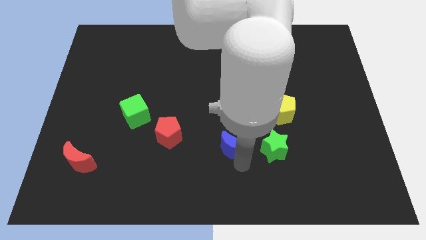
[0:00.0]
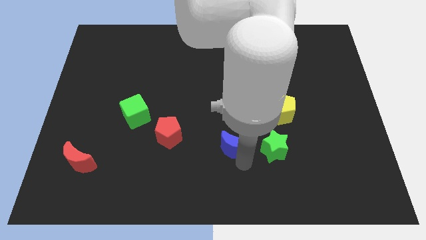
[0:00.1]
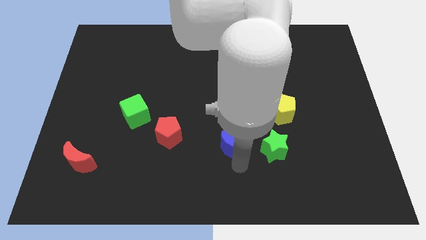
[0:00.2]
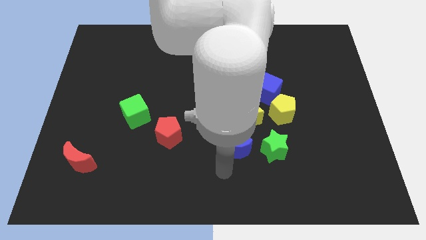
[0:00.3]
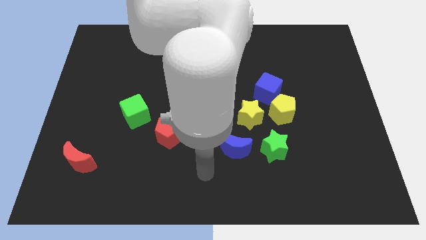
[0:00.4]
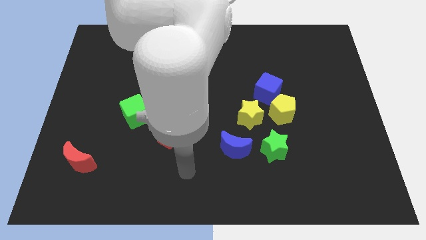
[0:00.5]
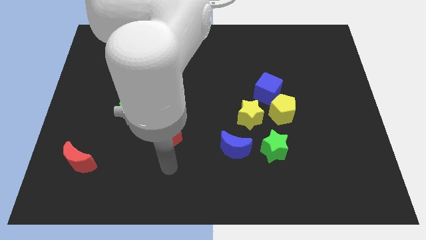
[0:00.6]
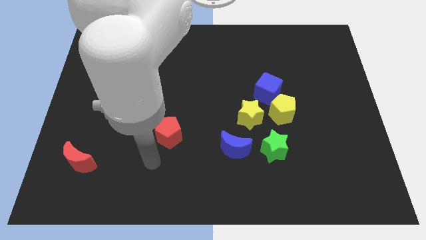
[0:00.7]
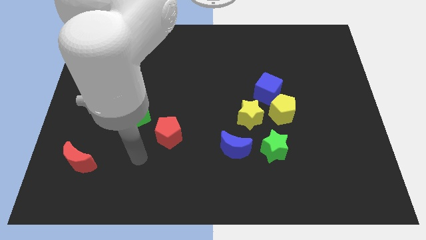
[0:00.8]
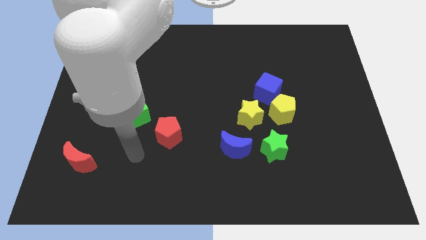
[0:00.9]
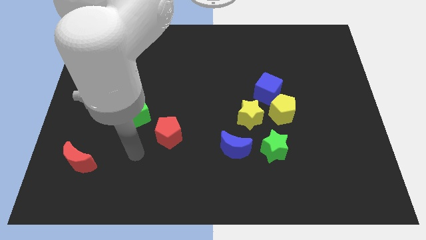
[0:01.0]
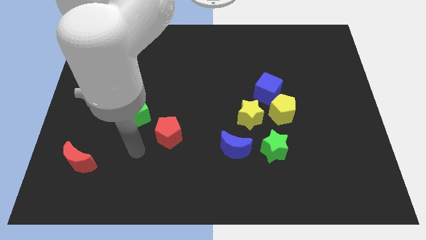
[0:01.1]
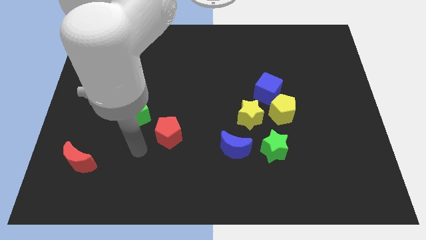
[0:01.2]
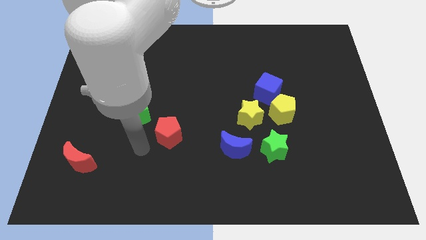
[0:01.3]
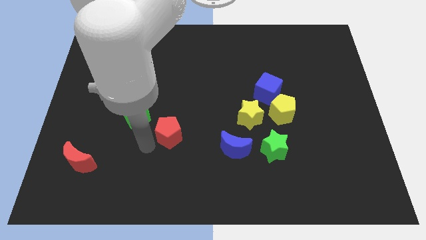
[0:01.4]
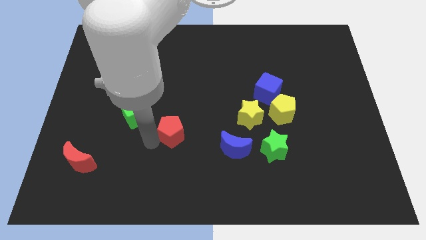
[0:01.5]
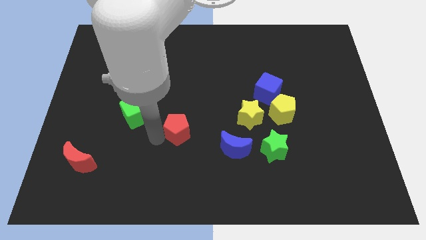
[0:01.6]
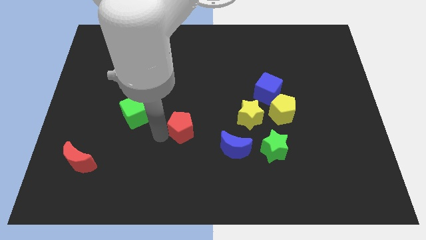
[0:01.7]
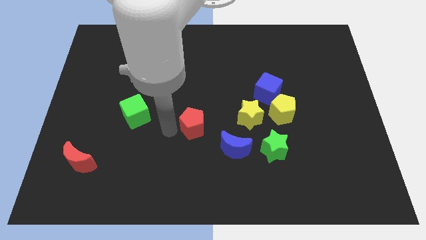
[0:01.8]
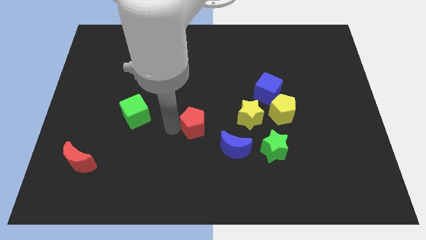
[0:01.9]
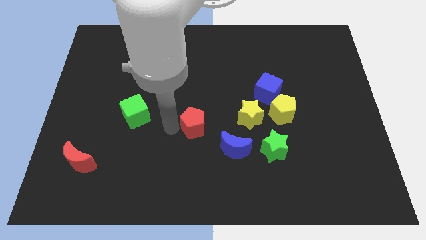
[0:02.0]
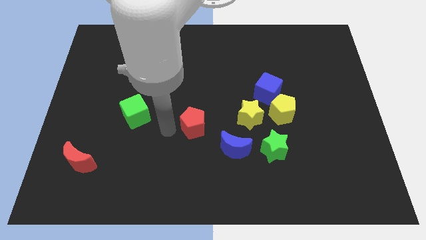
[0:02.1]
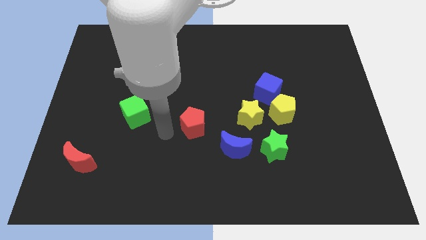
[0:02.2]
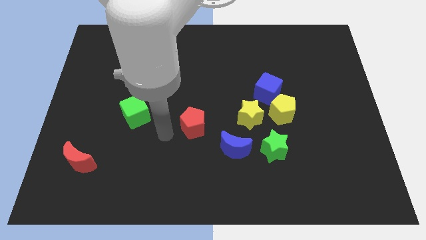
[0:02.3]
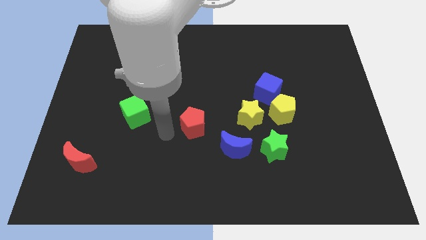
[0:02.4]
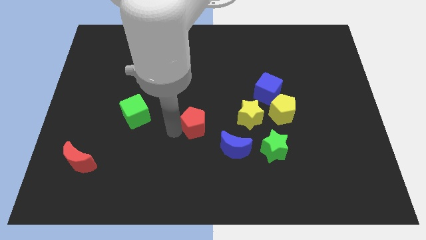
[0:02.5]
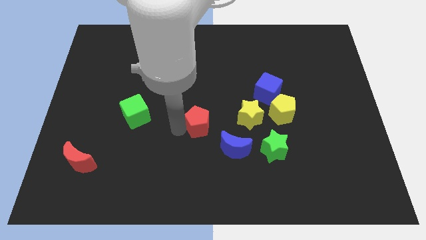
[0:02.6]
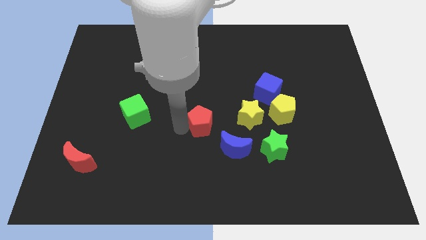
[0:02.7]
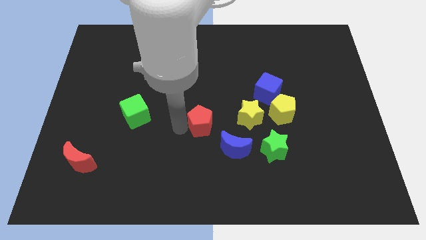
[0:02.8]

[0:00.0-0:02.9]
drag red pentagon beside blue moon

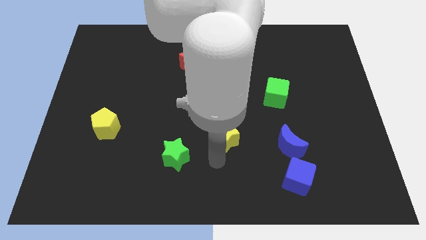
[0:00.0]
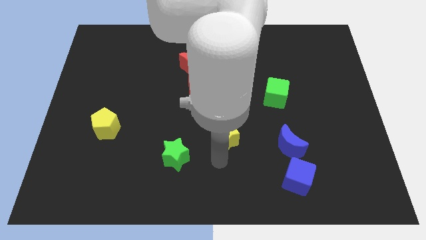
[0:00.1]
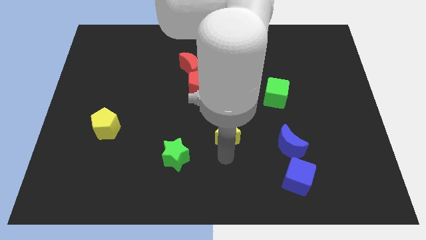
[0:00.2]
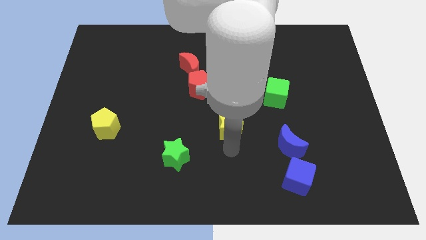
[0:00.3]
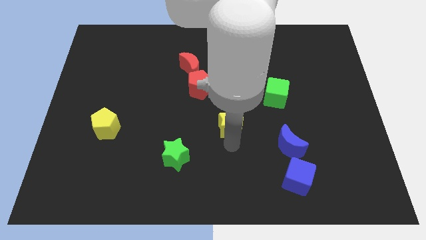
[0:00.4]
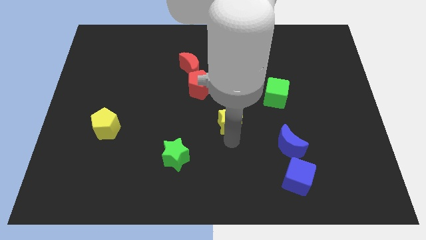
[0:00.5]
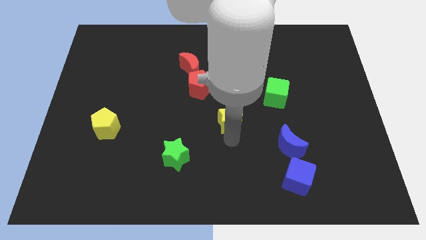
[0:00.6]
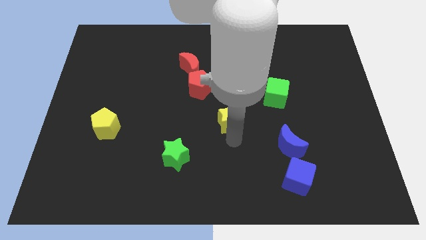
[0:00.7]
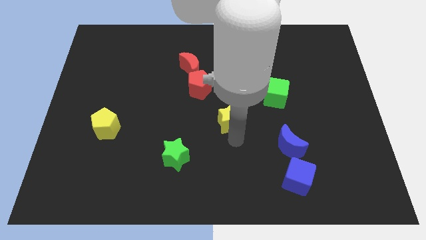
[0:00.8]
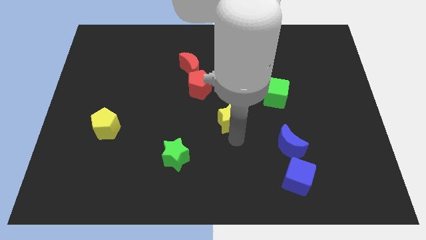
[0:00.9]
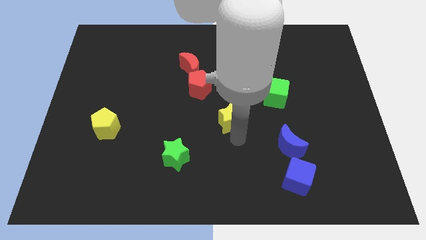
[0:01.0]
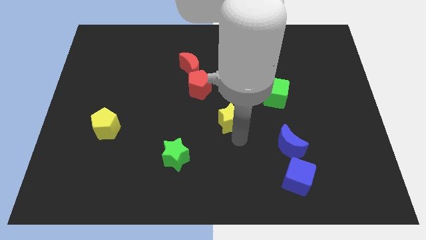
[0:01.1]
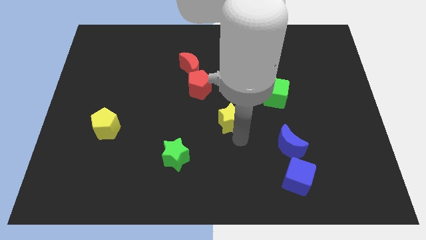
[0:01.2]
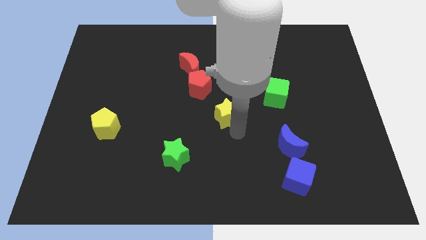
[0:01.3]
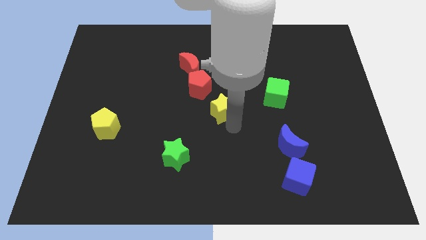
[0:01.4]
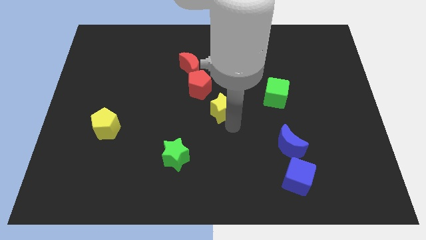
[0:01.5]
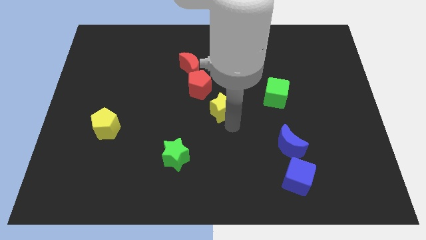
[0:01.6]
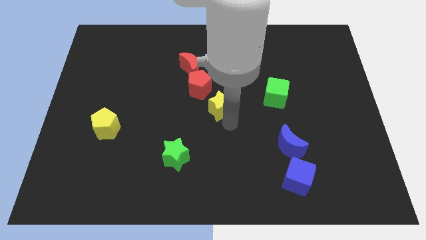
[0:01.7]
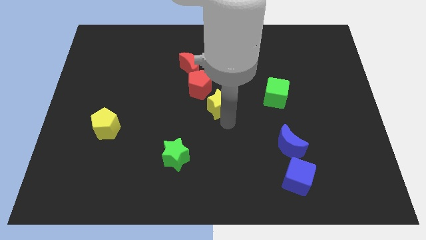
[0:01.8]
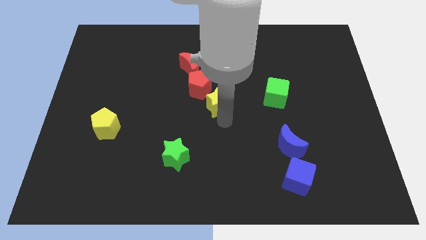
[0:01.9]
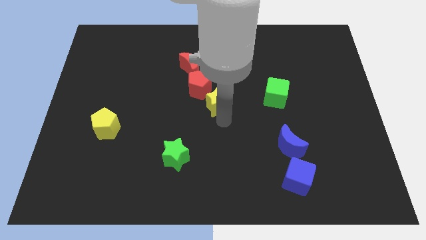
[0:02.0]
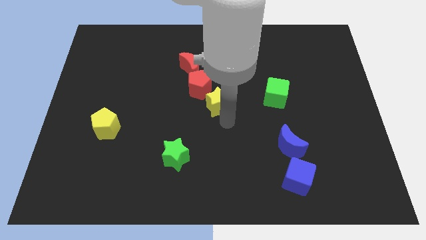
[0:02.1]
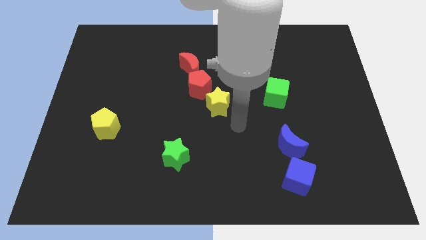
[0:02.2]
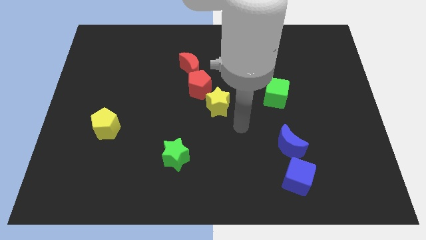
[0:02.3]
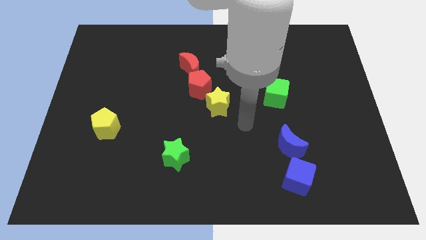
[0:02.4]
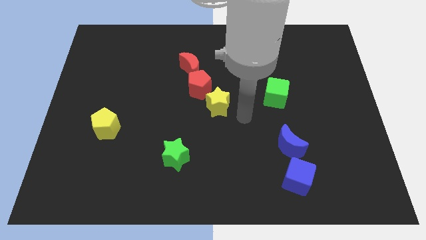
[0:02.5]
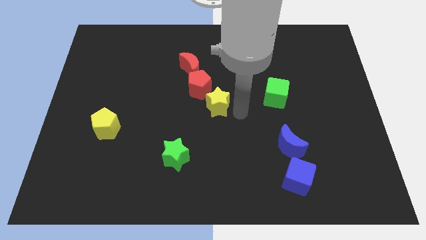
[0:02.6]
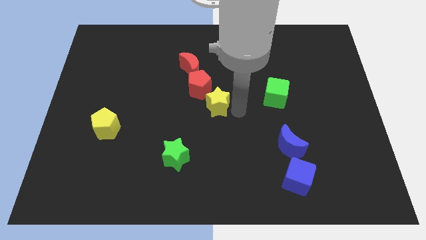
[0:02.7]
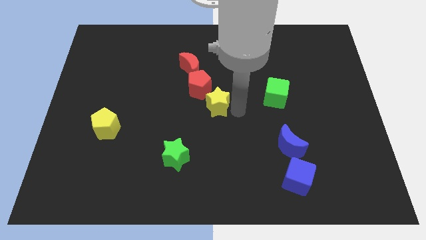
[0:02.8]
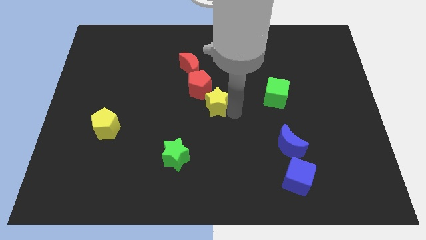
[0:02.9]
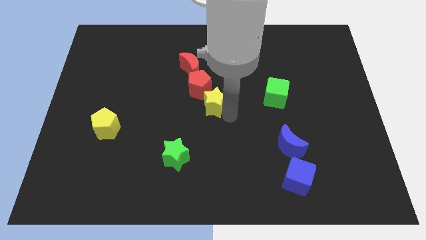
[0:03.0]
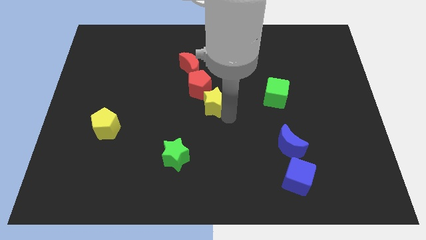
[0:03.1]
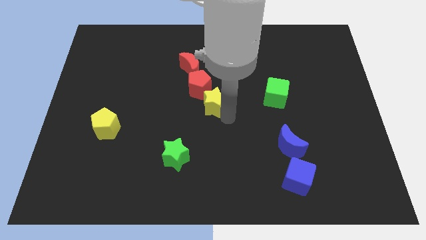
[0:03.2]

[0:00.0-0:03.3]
place yellow star to the bottom right of the red pentagon

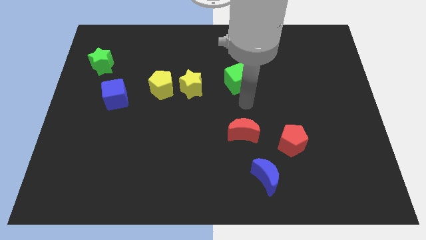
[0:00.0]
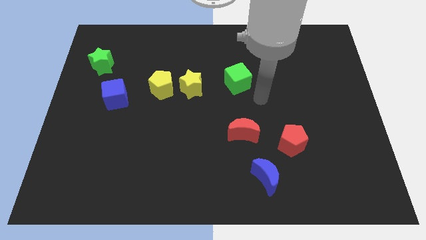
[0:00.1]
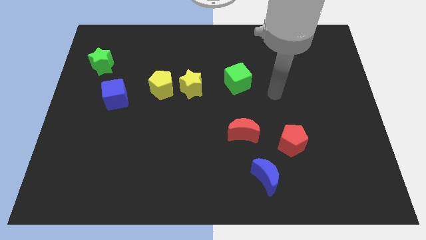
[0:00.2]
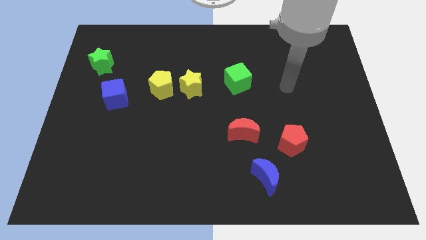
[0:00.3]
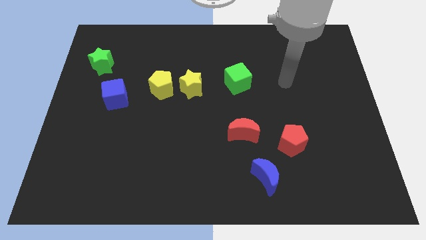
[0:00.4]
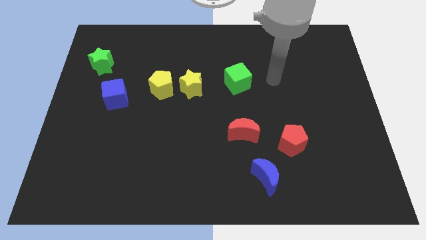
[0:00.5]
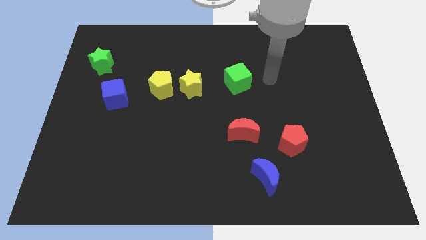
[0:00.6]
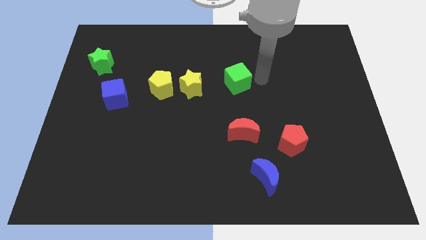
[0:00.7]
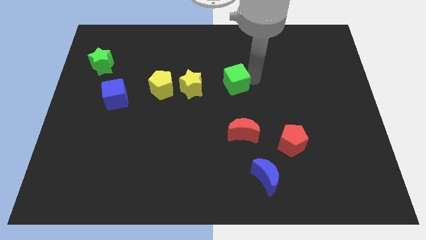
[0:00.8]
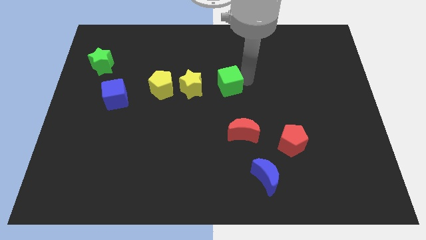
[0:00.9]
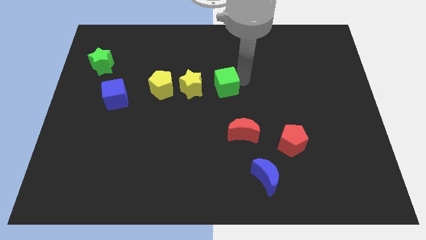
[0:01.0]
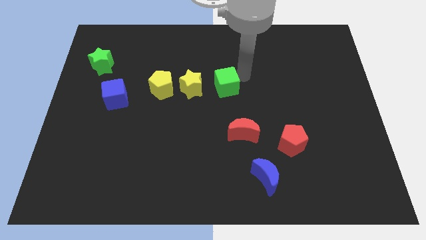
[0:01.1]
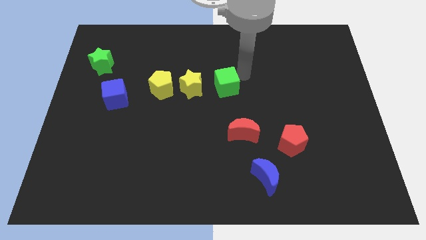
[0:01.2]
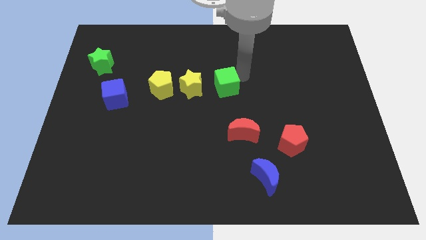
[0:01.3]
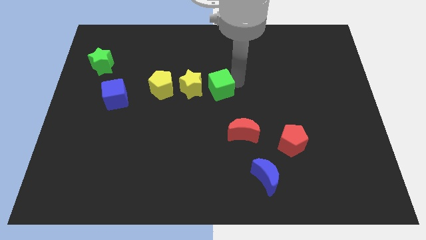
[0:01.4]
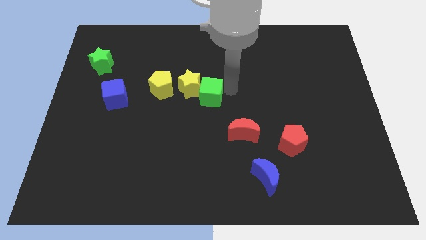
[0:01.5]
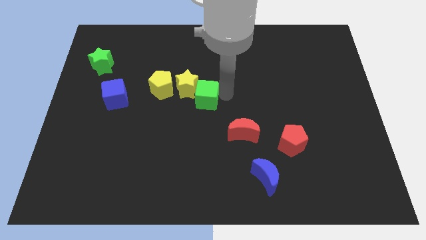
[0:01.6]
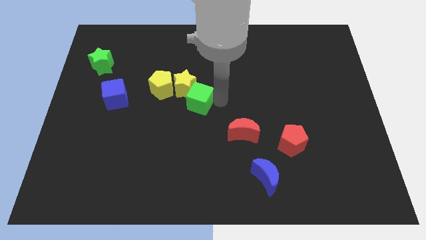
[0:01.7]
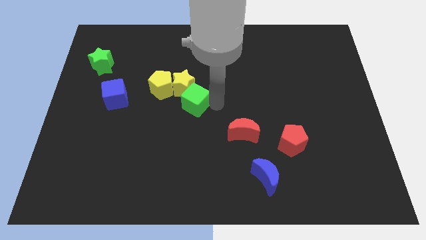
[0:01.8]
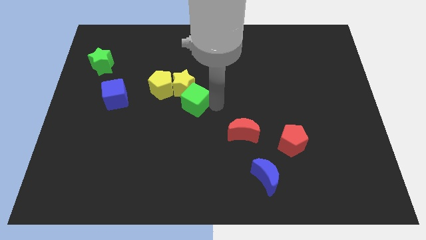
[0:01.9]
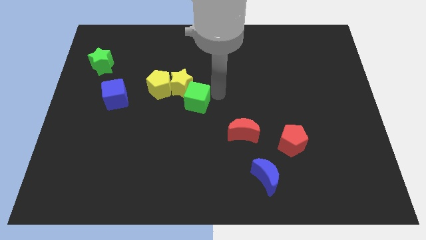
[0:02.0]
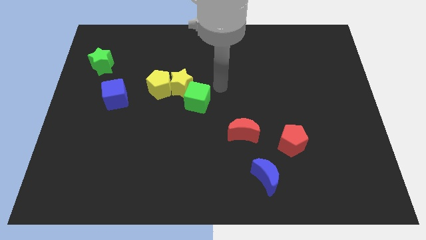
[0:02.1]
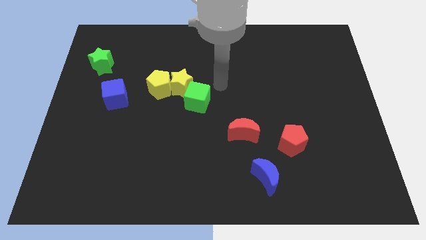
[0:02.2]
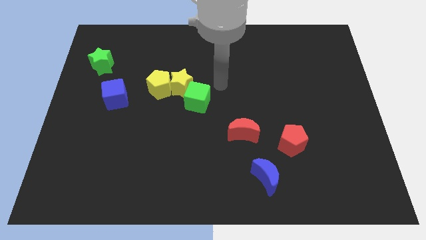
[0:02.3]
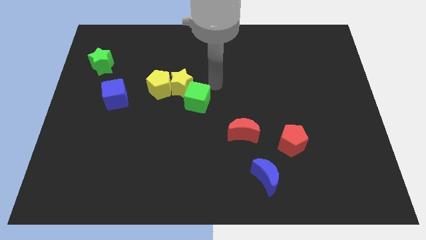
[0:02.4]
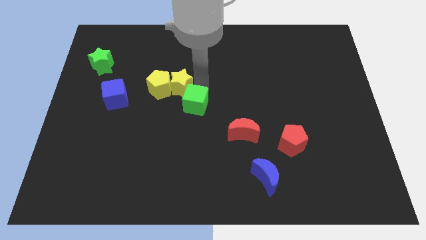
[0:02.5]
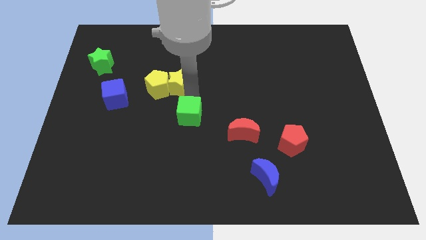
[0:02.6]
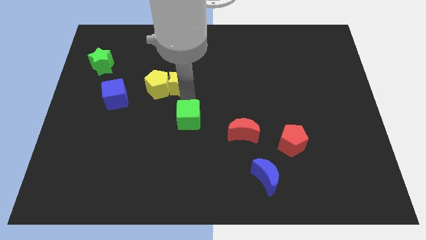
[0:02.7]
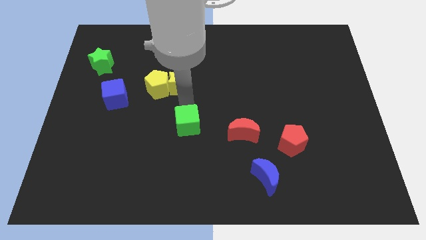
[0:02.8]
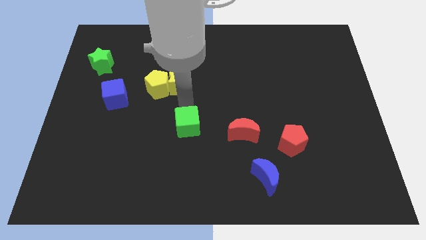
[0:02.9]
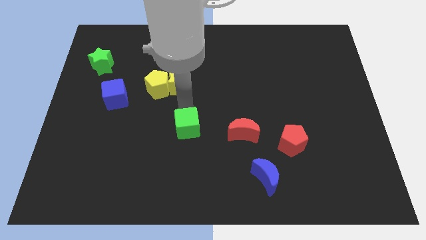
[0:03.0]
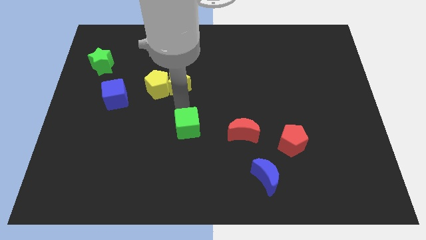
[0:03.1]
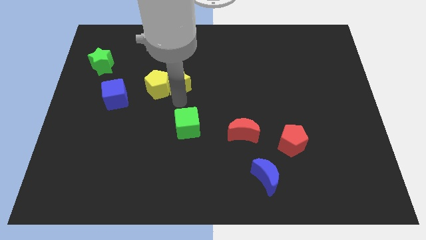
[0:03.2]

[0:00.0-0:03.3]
push the green cube to the bottom of the yellow star
